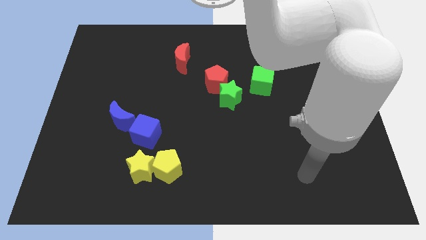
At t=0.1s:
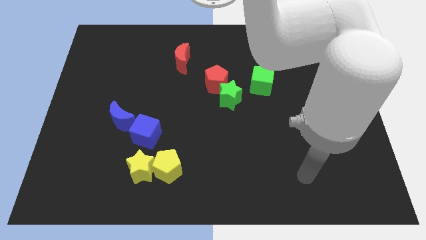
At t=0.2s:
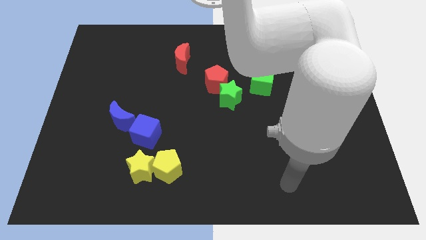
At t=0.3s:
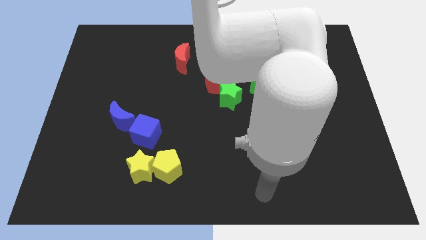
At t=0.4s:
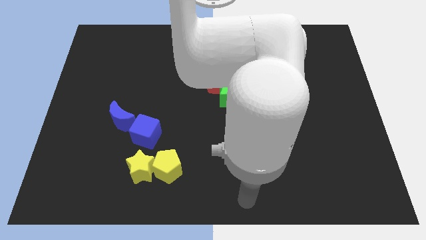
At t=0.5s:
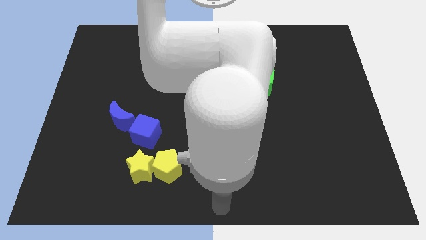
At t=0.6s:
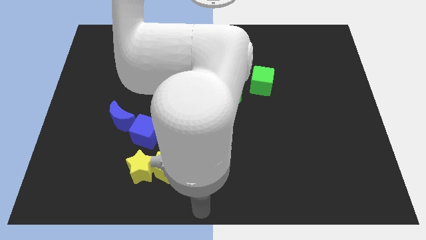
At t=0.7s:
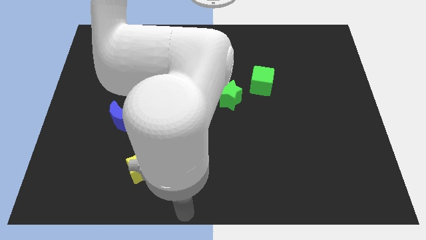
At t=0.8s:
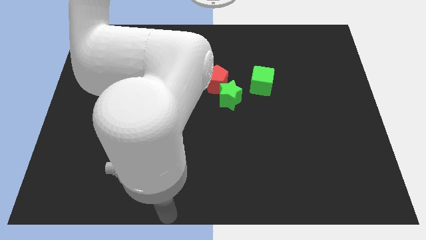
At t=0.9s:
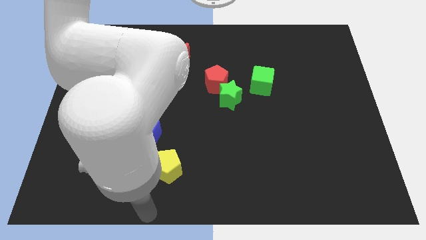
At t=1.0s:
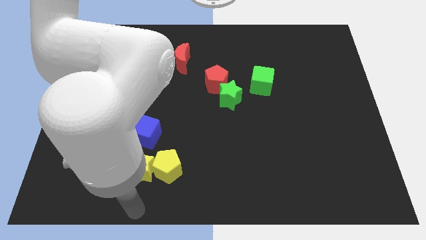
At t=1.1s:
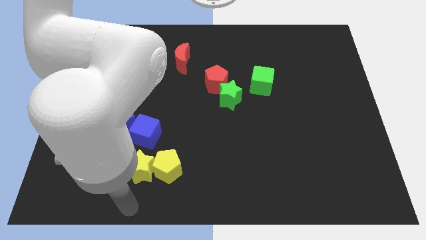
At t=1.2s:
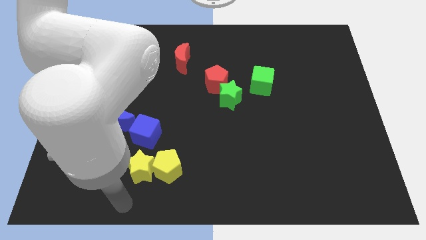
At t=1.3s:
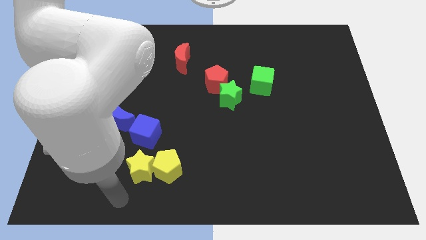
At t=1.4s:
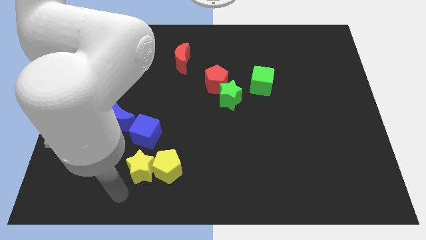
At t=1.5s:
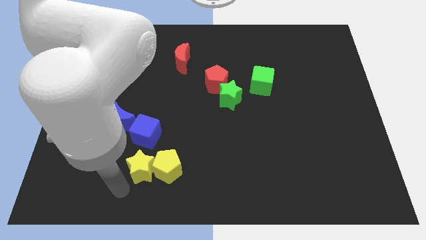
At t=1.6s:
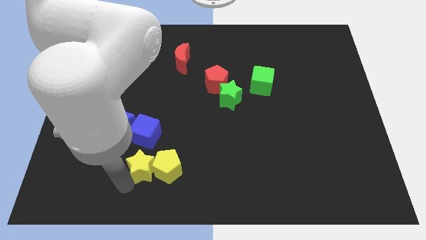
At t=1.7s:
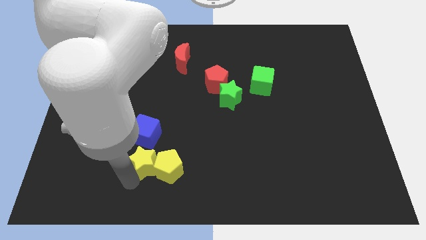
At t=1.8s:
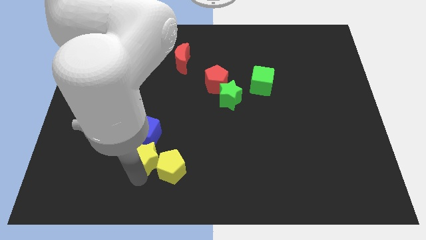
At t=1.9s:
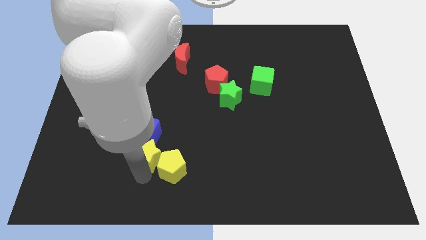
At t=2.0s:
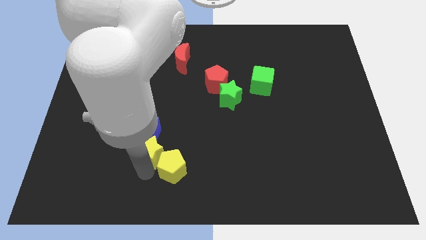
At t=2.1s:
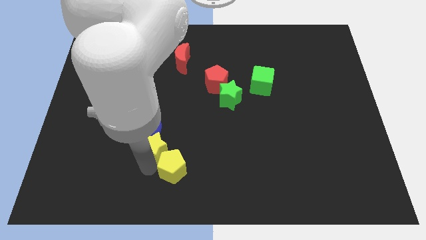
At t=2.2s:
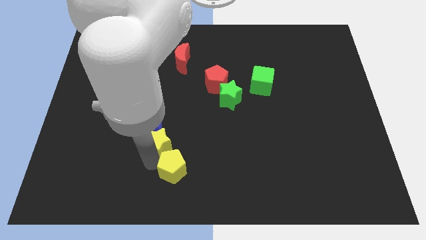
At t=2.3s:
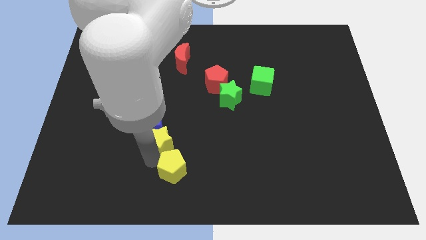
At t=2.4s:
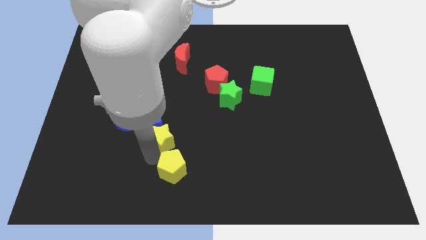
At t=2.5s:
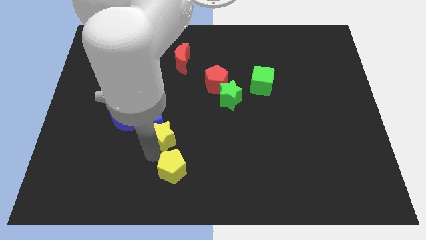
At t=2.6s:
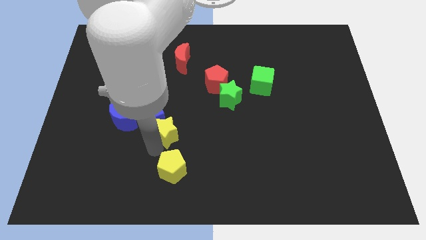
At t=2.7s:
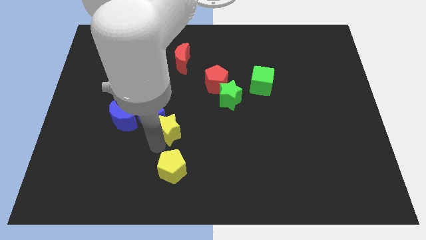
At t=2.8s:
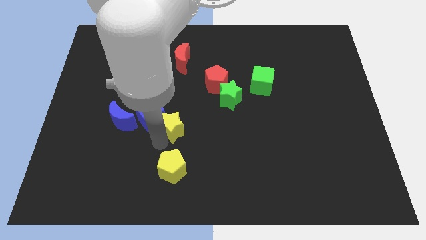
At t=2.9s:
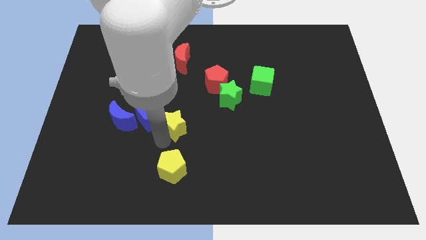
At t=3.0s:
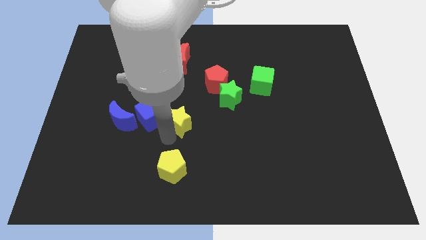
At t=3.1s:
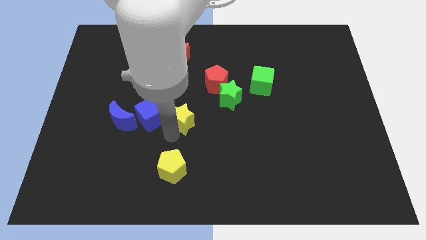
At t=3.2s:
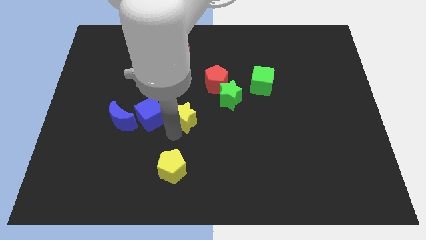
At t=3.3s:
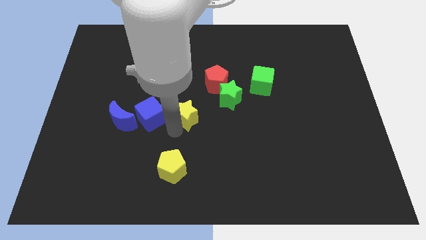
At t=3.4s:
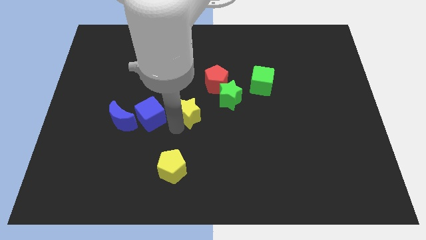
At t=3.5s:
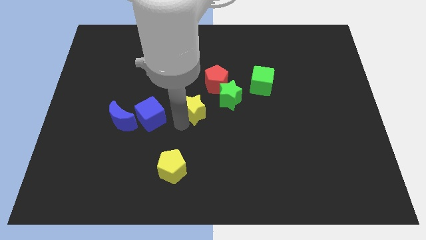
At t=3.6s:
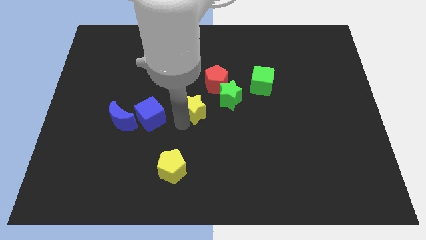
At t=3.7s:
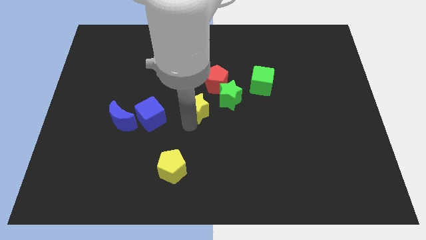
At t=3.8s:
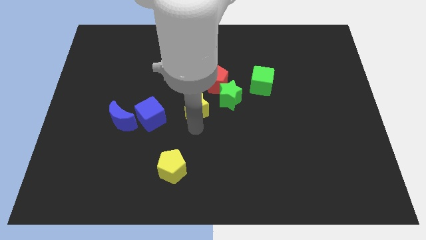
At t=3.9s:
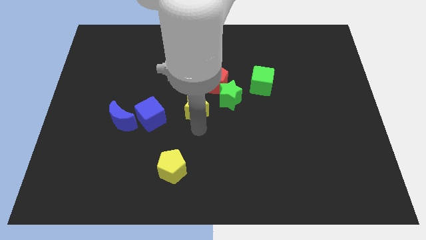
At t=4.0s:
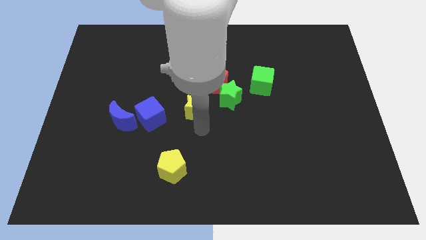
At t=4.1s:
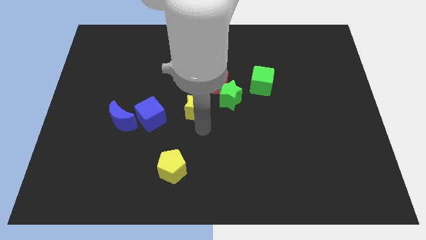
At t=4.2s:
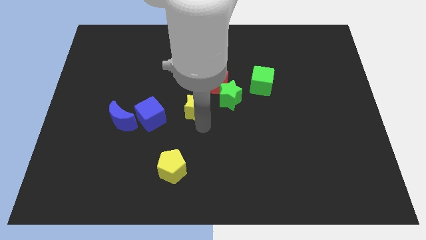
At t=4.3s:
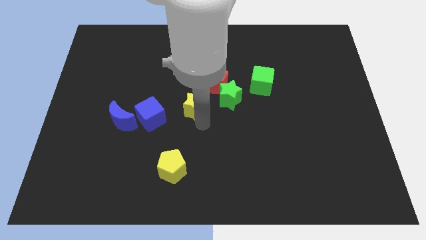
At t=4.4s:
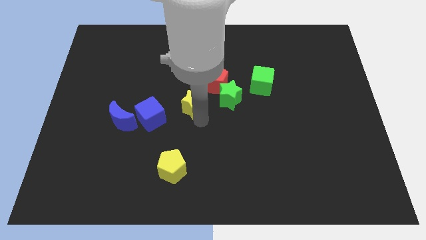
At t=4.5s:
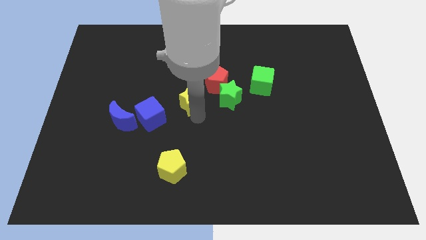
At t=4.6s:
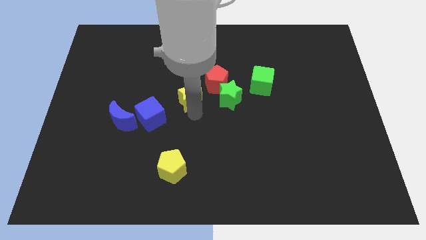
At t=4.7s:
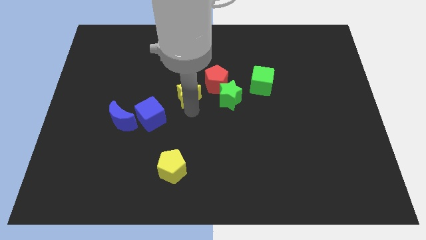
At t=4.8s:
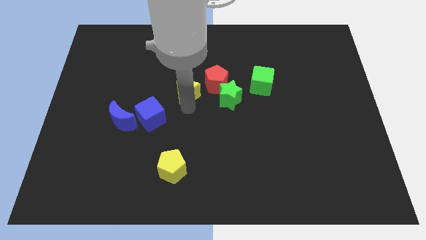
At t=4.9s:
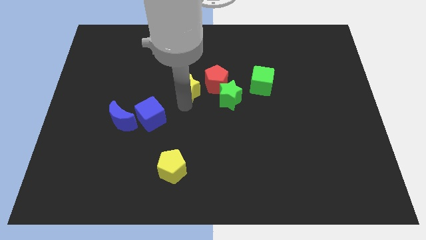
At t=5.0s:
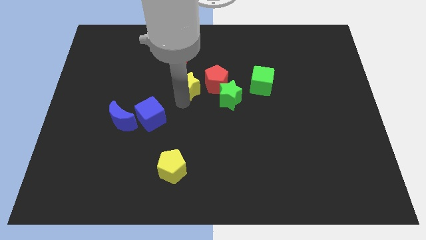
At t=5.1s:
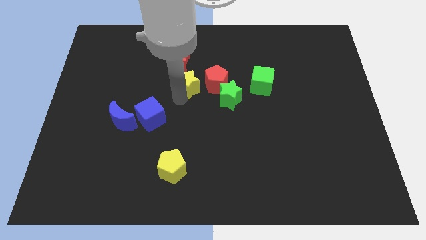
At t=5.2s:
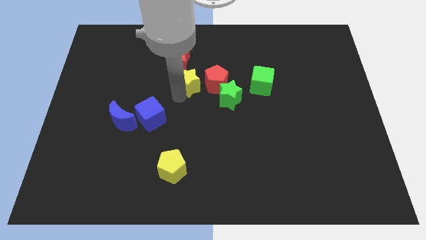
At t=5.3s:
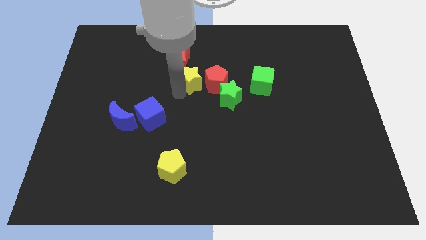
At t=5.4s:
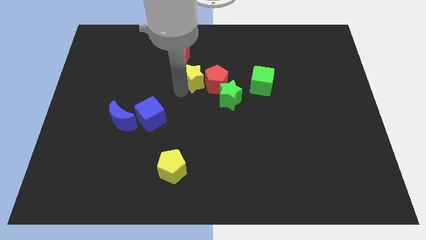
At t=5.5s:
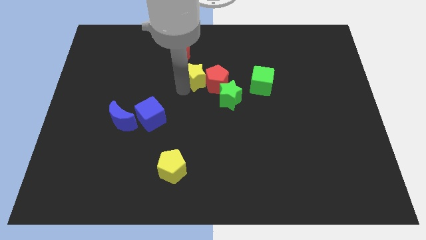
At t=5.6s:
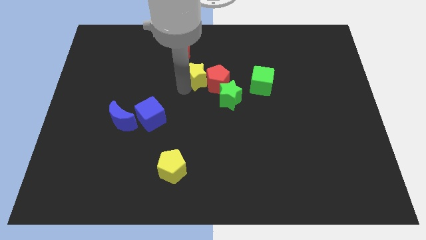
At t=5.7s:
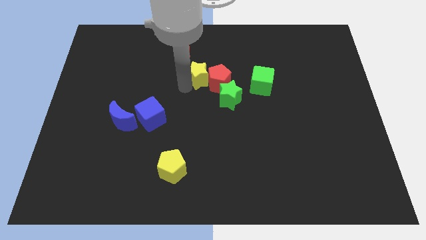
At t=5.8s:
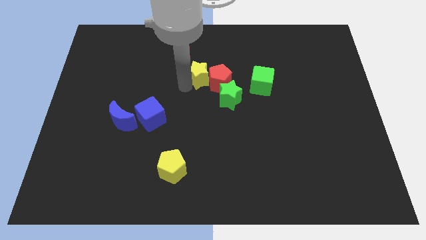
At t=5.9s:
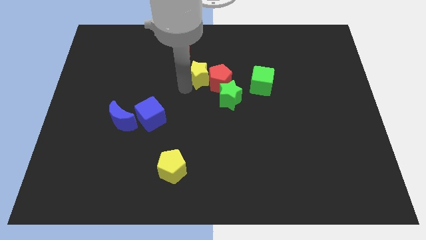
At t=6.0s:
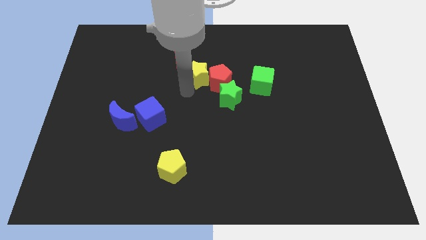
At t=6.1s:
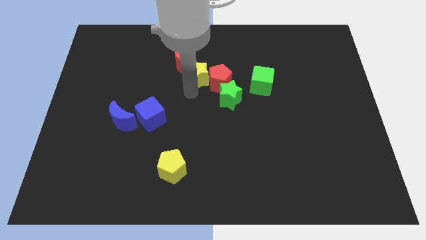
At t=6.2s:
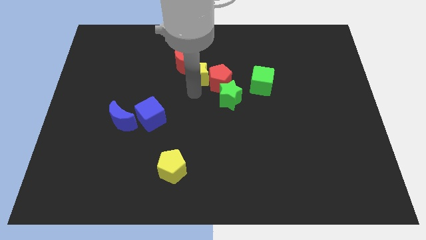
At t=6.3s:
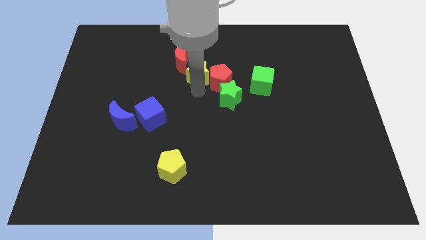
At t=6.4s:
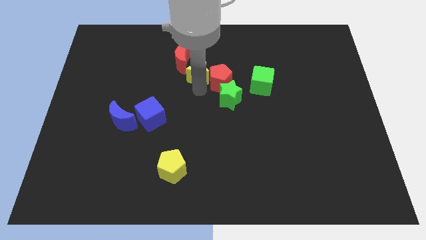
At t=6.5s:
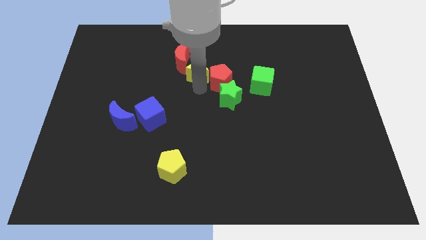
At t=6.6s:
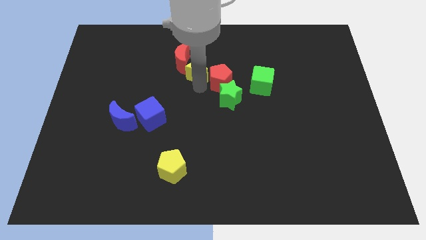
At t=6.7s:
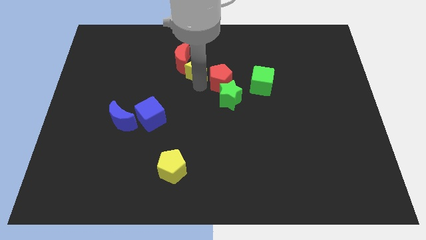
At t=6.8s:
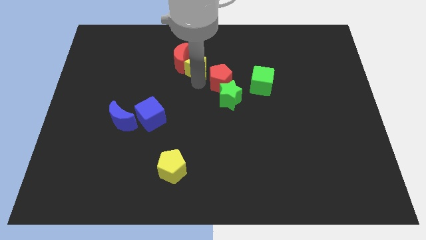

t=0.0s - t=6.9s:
slide the yellow star to the red moon

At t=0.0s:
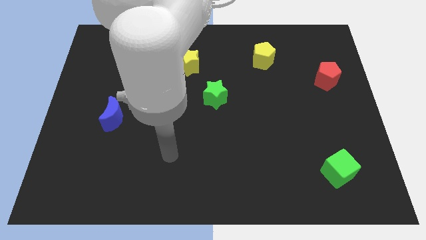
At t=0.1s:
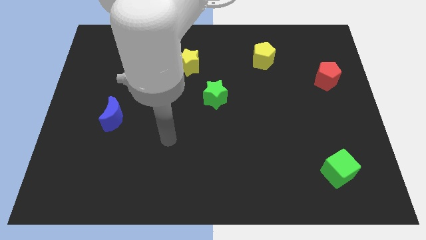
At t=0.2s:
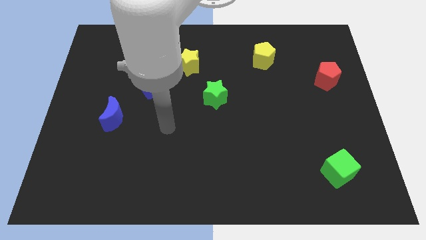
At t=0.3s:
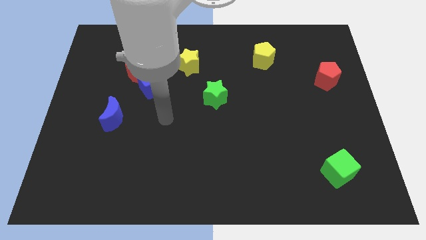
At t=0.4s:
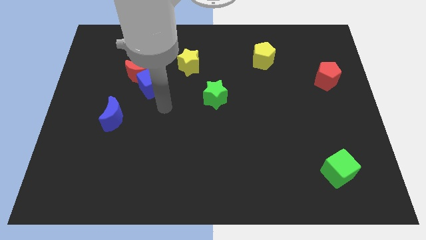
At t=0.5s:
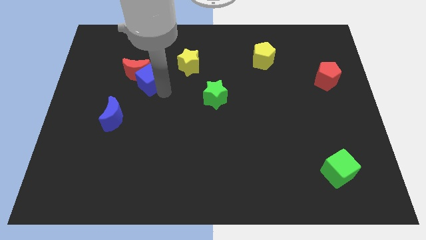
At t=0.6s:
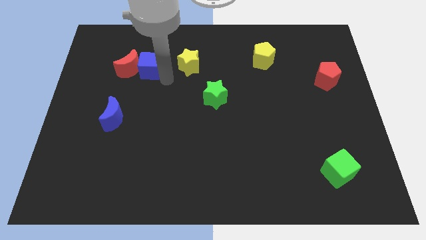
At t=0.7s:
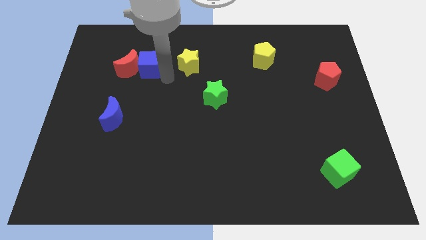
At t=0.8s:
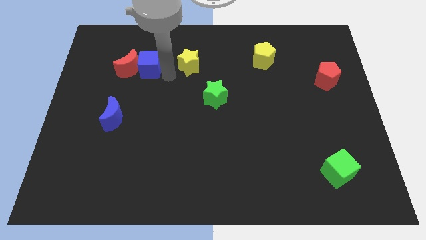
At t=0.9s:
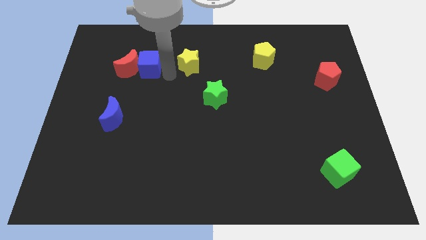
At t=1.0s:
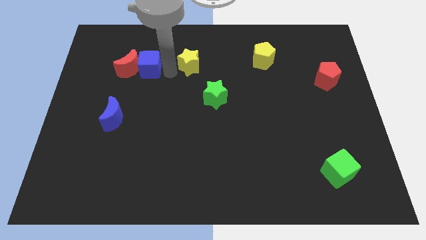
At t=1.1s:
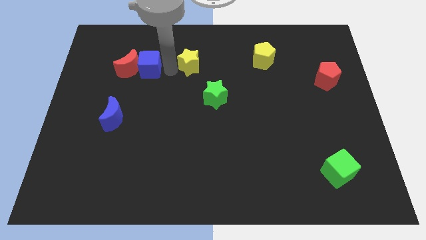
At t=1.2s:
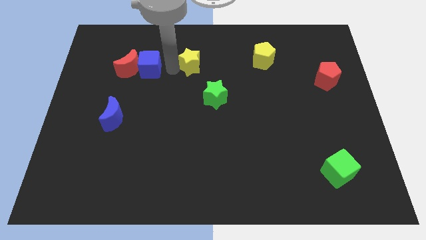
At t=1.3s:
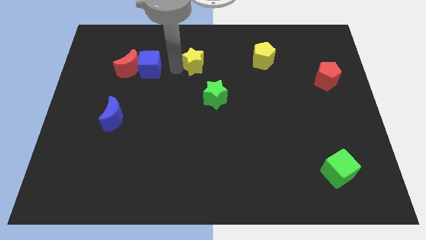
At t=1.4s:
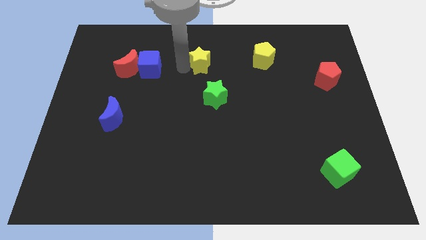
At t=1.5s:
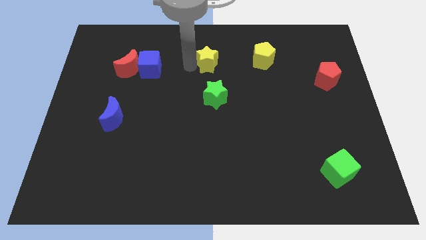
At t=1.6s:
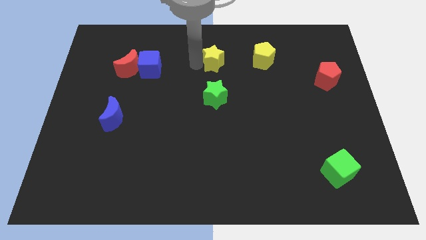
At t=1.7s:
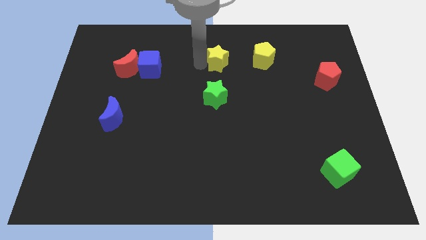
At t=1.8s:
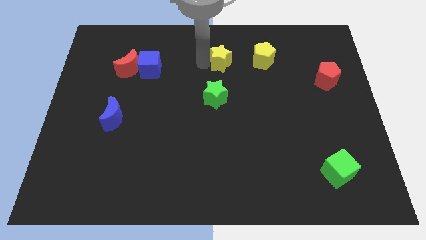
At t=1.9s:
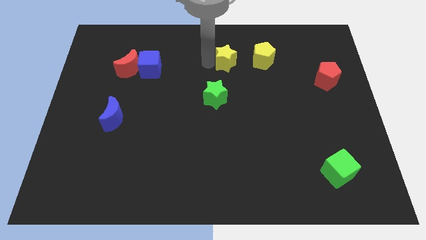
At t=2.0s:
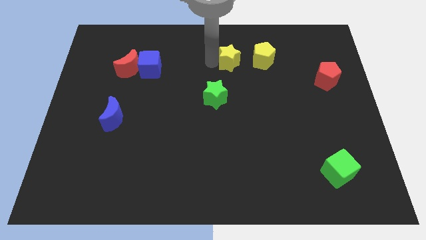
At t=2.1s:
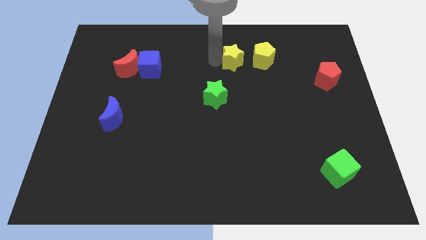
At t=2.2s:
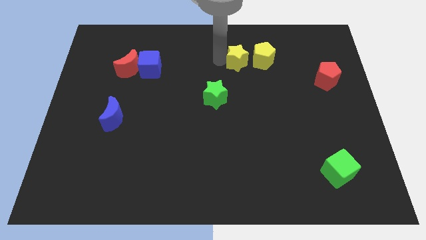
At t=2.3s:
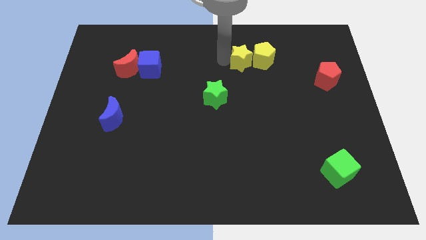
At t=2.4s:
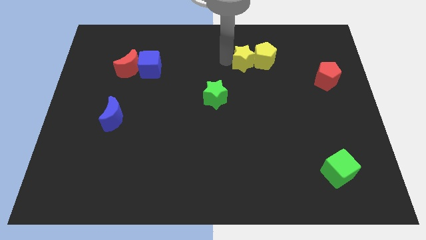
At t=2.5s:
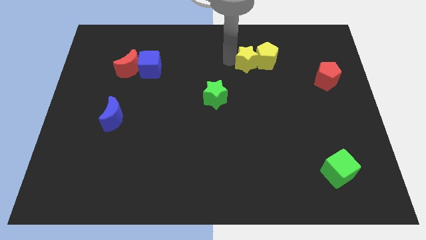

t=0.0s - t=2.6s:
put the yellow star next to the yellow pentagon
